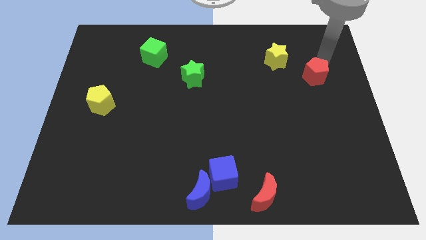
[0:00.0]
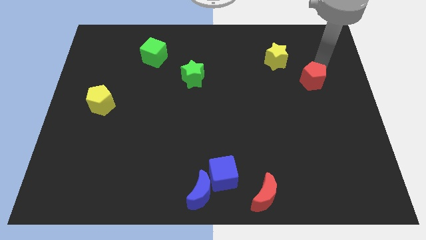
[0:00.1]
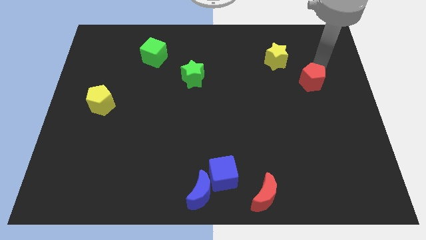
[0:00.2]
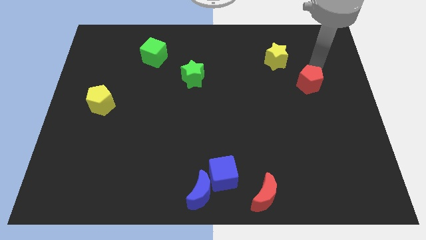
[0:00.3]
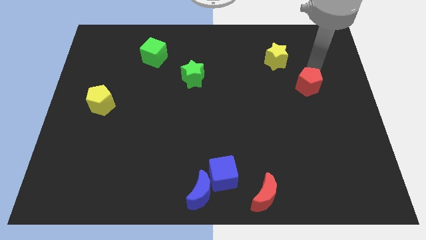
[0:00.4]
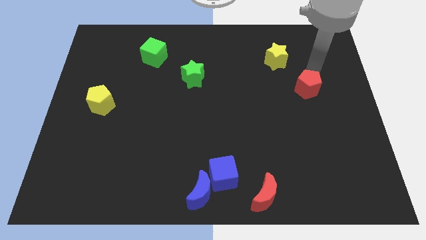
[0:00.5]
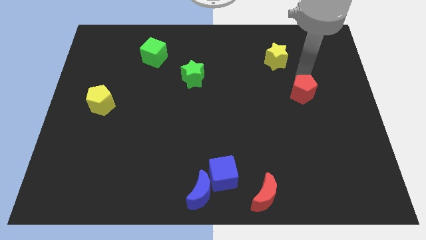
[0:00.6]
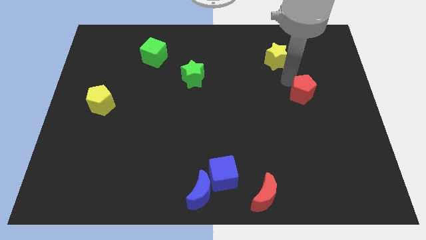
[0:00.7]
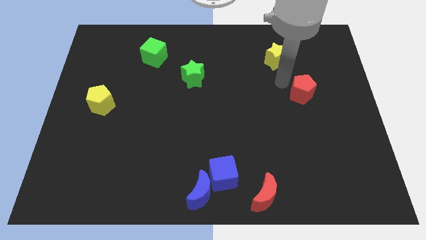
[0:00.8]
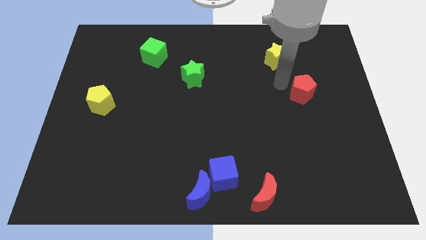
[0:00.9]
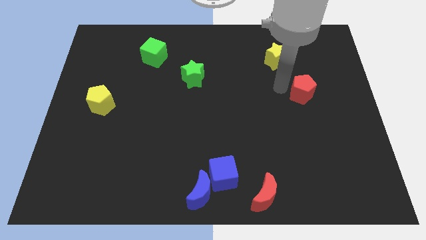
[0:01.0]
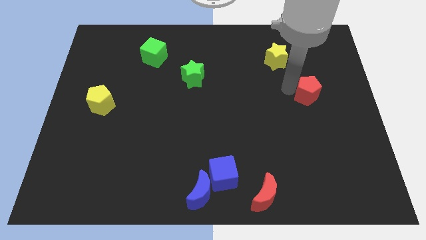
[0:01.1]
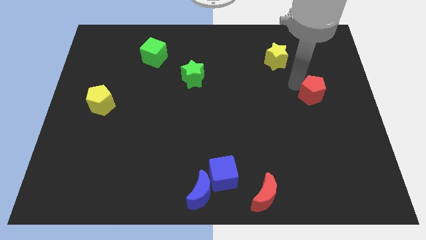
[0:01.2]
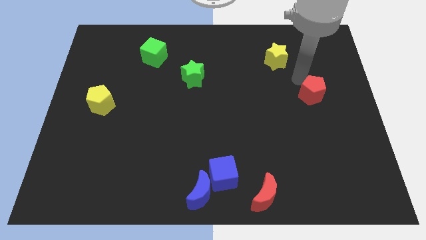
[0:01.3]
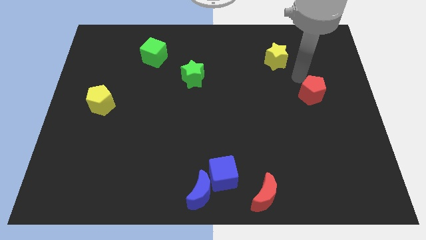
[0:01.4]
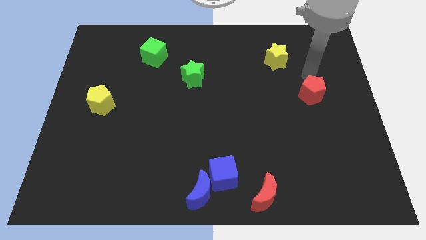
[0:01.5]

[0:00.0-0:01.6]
move the red pentagon to the bottom of the board

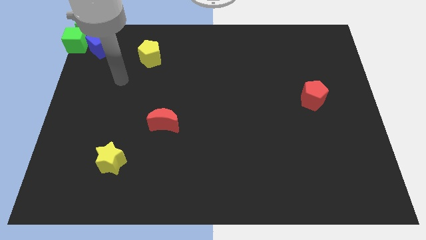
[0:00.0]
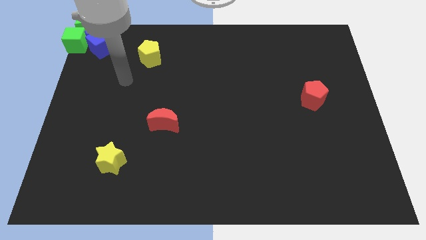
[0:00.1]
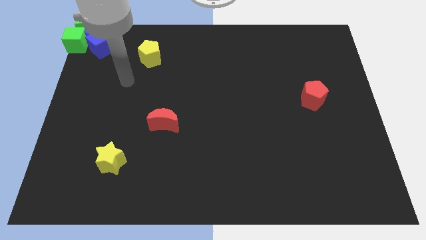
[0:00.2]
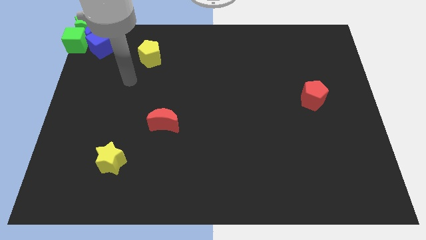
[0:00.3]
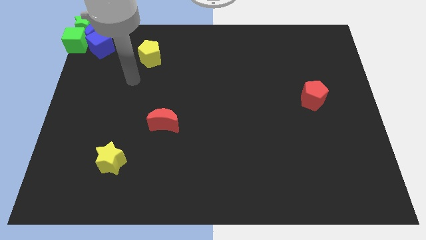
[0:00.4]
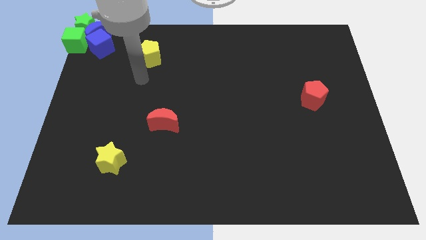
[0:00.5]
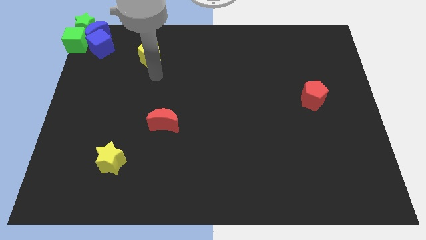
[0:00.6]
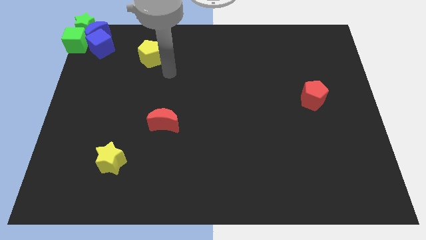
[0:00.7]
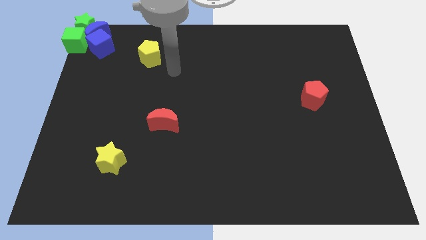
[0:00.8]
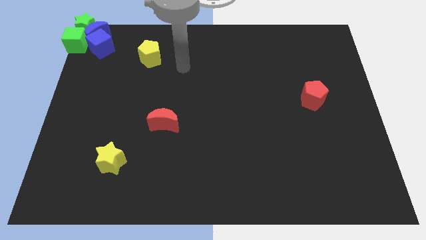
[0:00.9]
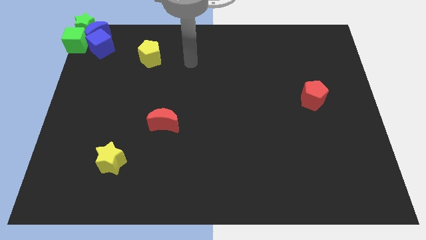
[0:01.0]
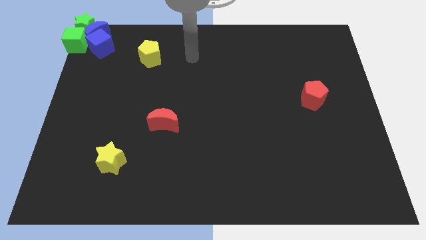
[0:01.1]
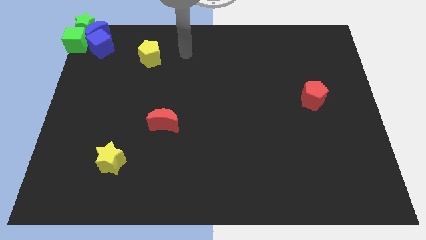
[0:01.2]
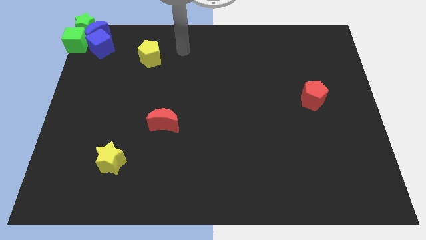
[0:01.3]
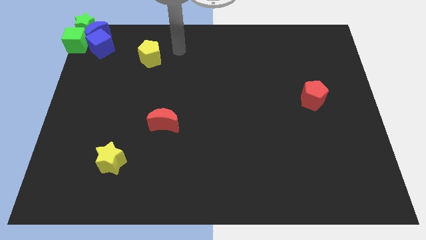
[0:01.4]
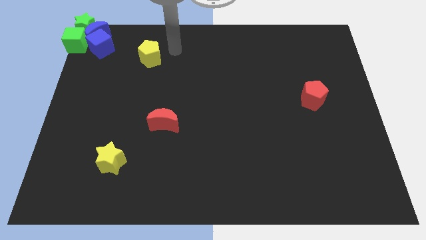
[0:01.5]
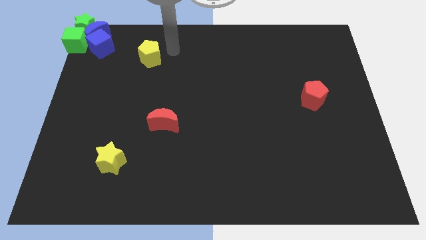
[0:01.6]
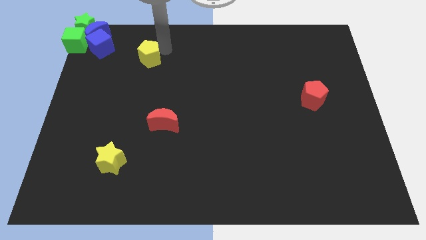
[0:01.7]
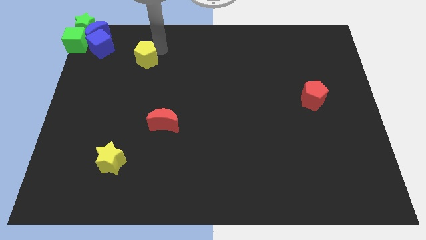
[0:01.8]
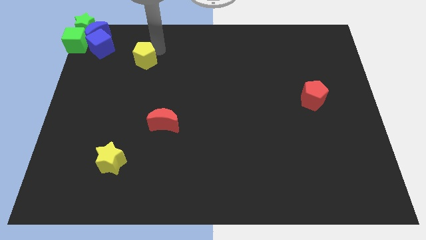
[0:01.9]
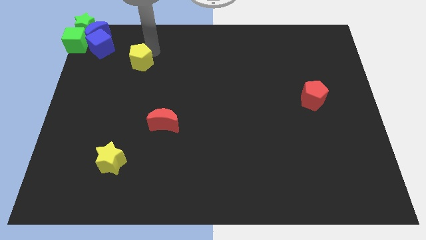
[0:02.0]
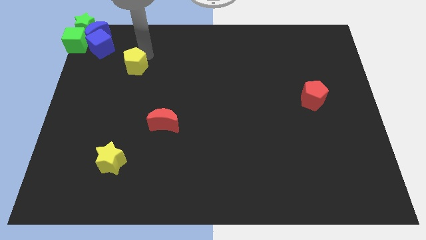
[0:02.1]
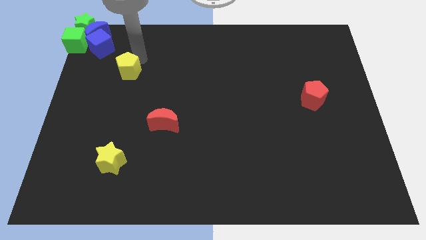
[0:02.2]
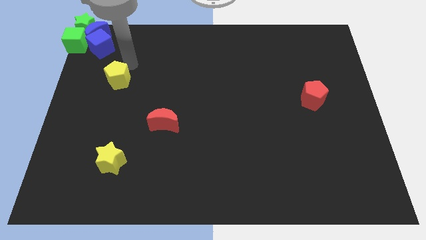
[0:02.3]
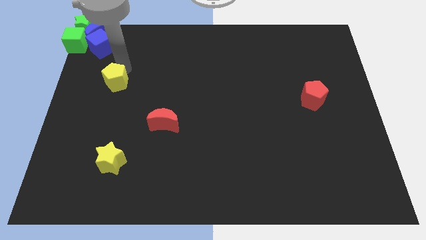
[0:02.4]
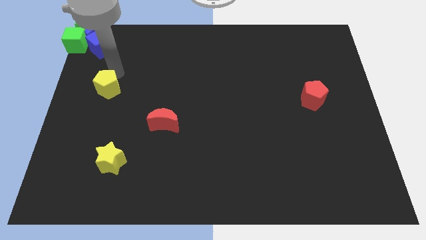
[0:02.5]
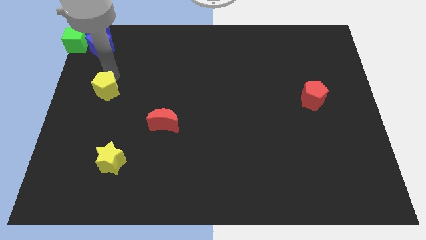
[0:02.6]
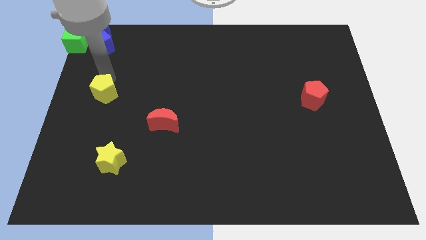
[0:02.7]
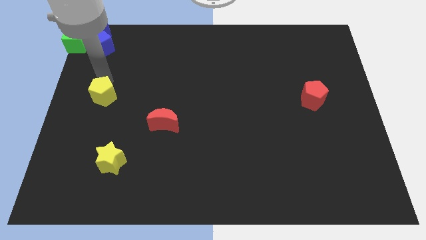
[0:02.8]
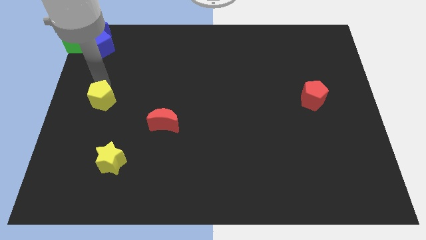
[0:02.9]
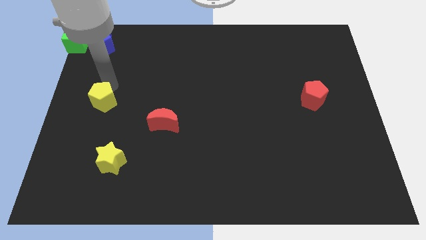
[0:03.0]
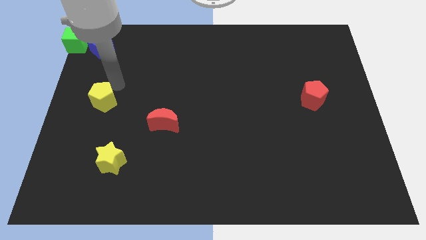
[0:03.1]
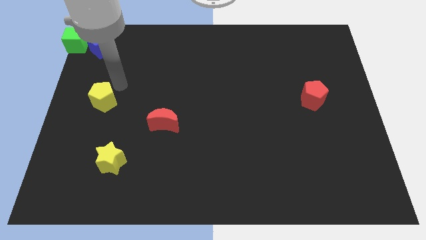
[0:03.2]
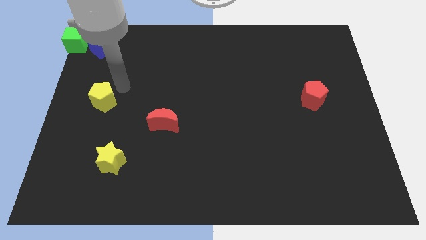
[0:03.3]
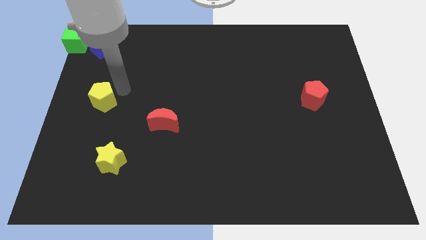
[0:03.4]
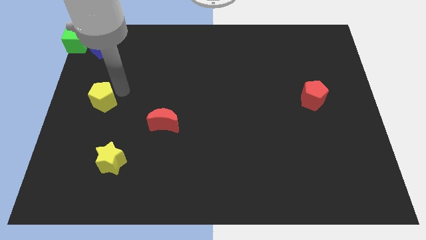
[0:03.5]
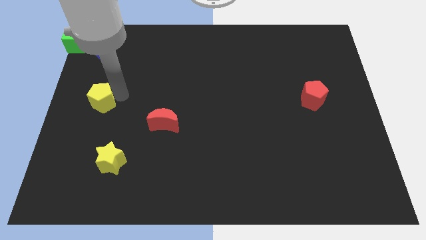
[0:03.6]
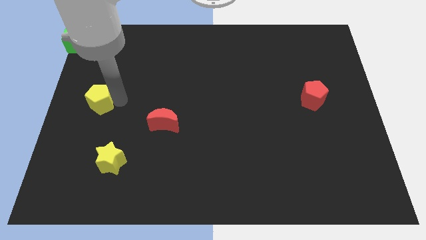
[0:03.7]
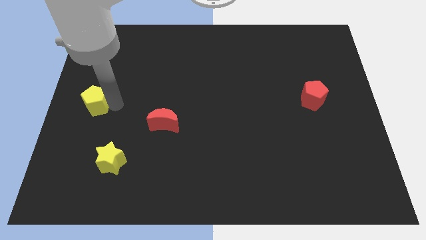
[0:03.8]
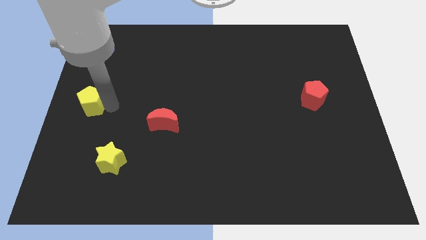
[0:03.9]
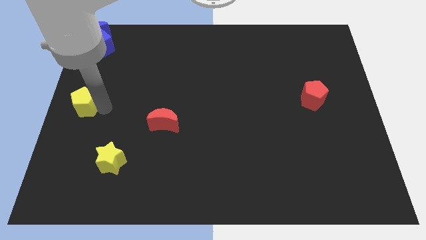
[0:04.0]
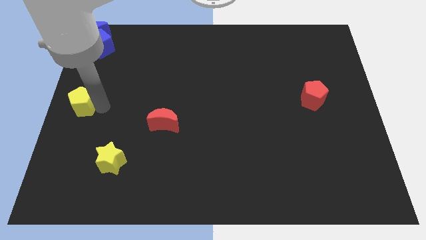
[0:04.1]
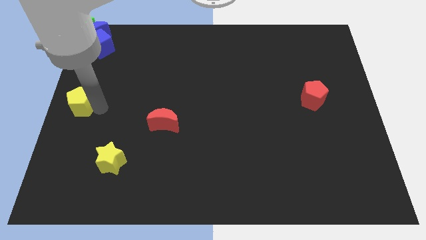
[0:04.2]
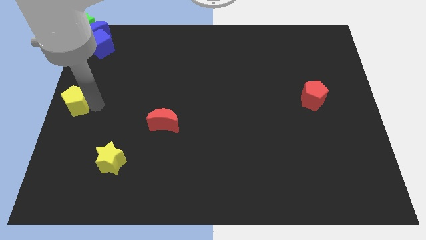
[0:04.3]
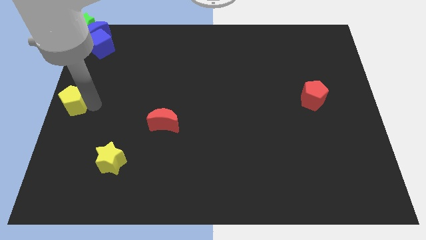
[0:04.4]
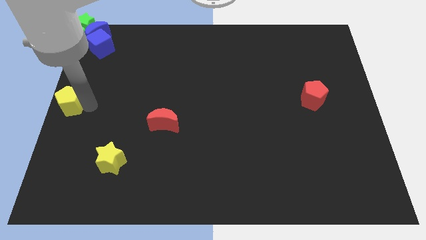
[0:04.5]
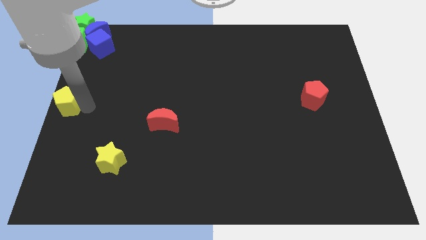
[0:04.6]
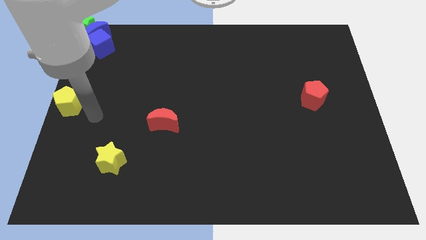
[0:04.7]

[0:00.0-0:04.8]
push the yellow pentagon to the center left of the board

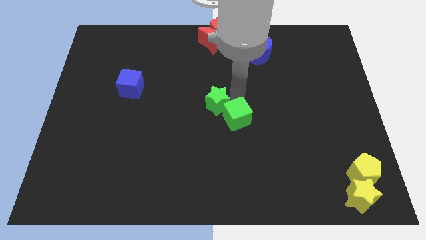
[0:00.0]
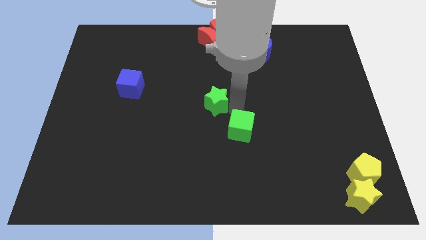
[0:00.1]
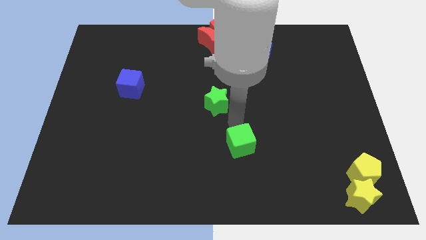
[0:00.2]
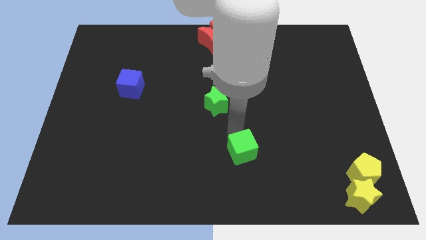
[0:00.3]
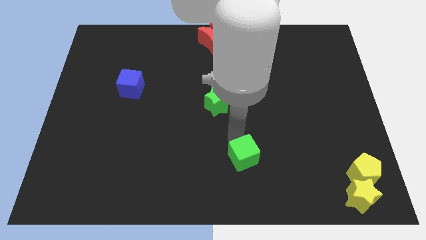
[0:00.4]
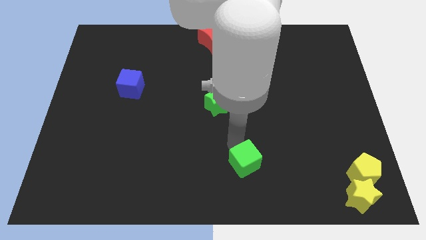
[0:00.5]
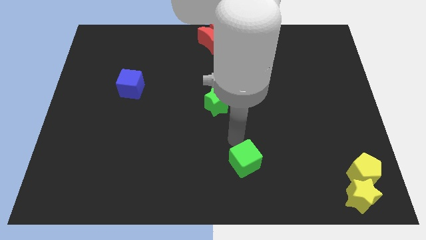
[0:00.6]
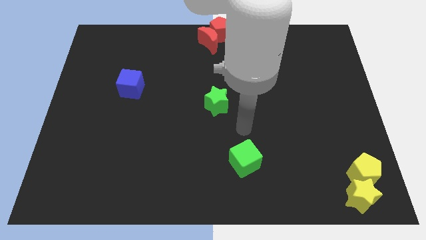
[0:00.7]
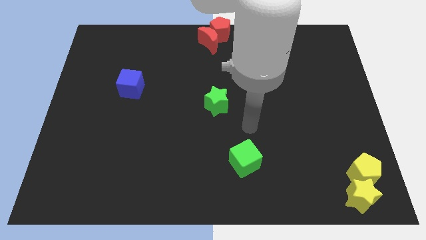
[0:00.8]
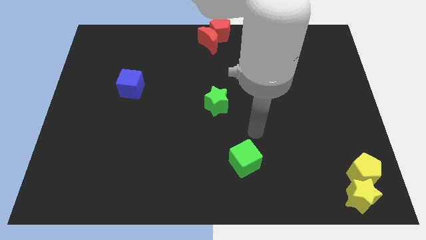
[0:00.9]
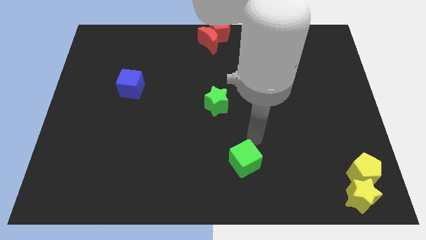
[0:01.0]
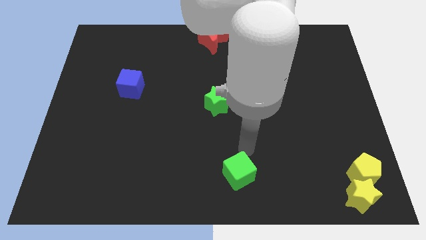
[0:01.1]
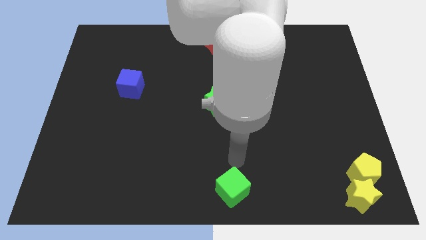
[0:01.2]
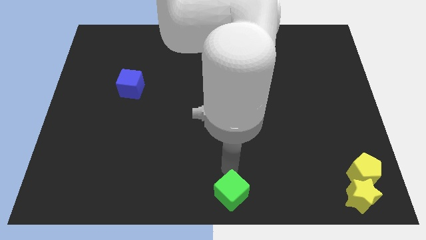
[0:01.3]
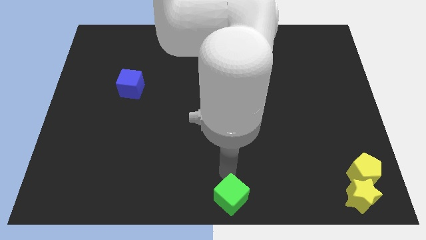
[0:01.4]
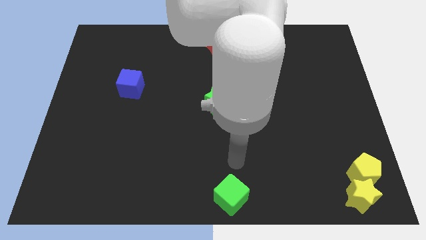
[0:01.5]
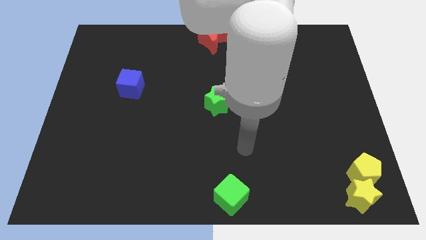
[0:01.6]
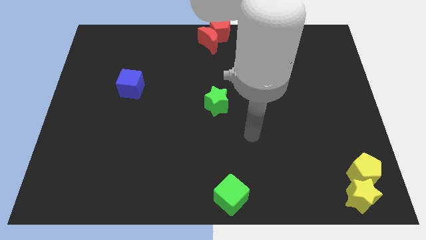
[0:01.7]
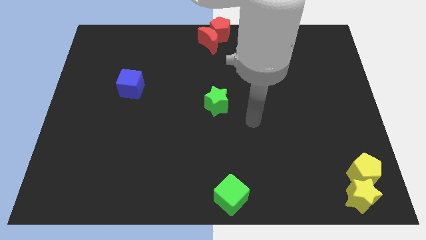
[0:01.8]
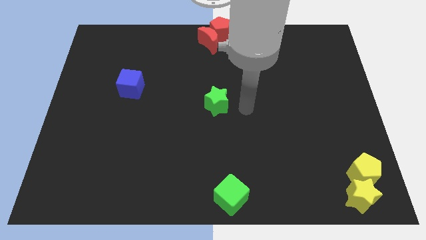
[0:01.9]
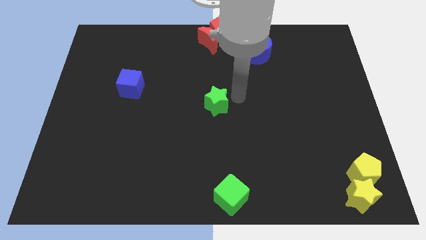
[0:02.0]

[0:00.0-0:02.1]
place the green cube on the bottom center of the board

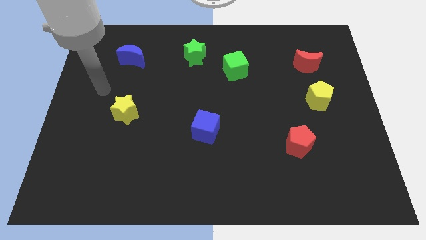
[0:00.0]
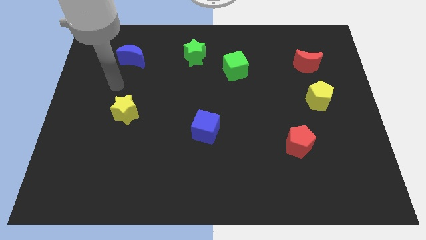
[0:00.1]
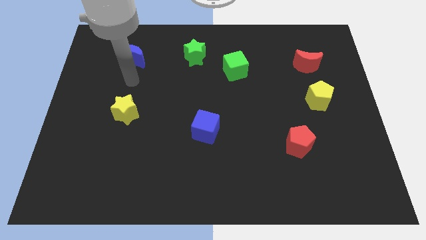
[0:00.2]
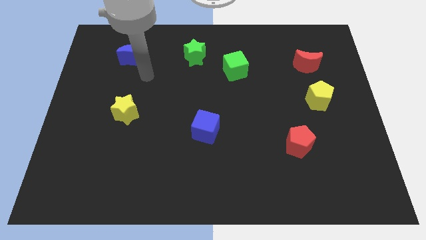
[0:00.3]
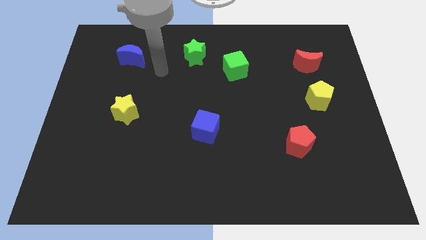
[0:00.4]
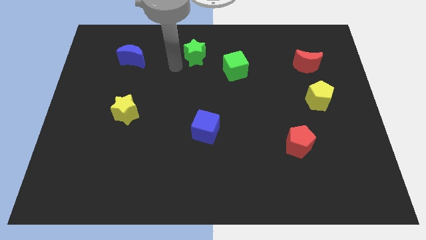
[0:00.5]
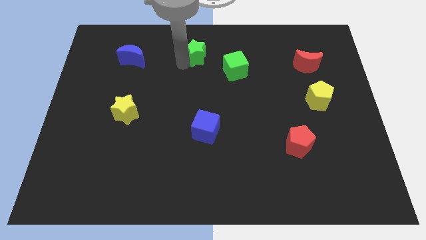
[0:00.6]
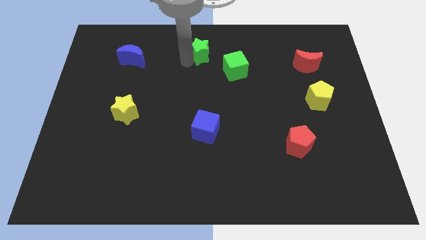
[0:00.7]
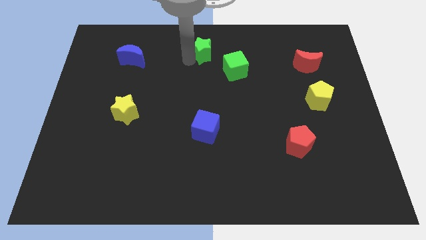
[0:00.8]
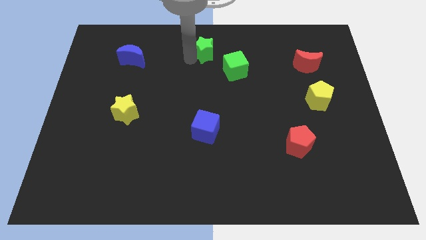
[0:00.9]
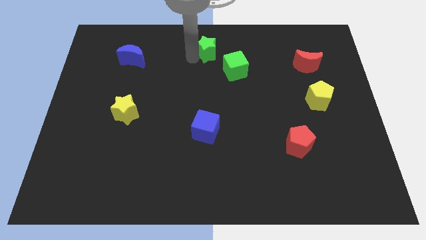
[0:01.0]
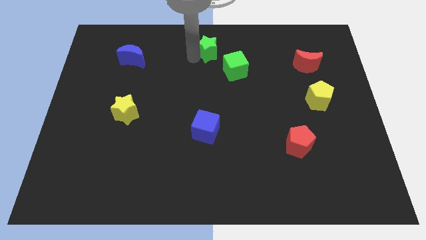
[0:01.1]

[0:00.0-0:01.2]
put your hand at the left of the green star
